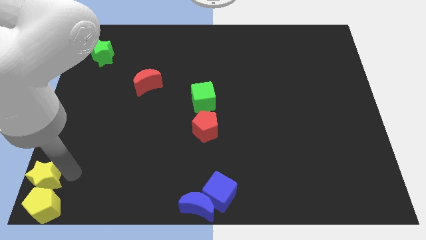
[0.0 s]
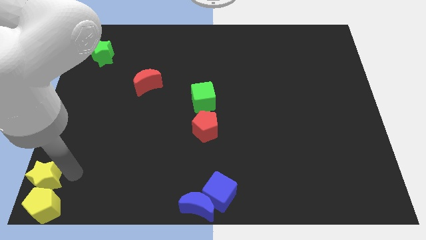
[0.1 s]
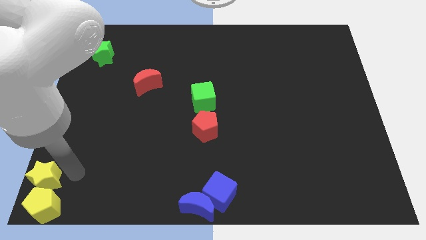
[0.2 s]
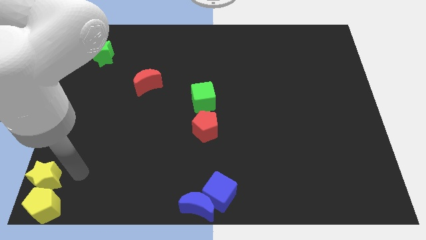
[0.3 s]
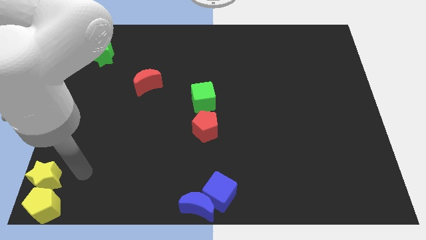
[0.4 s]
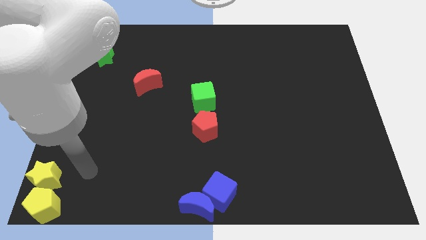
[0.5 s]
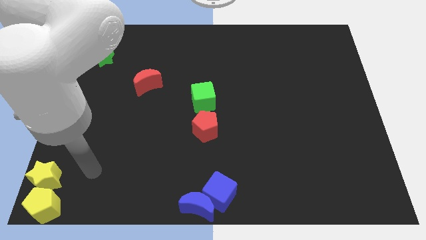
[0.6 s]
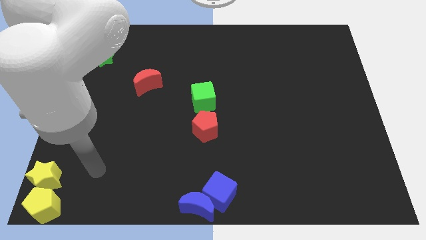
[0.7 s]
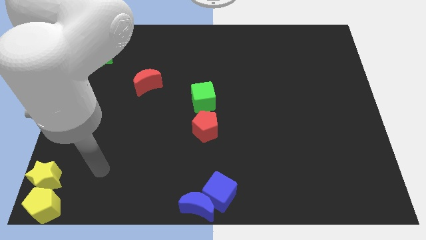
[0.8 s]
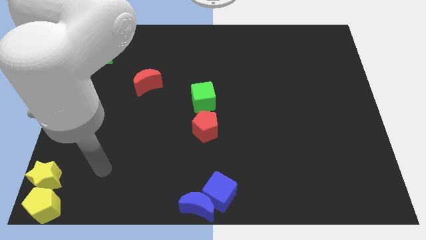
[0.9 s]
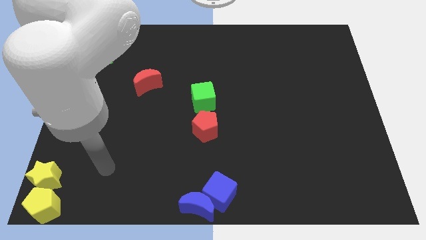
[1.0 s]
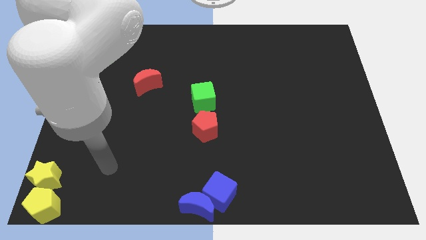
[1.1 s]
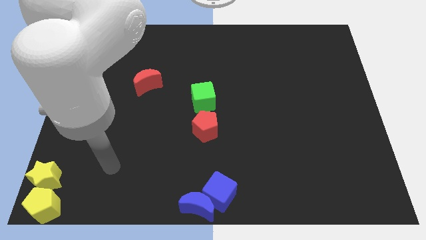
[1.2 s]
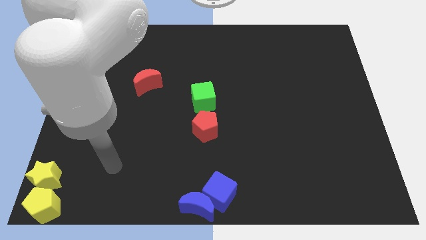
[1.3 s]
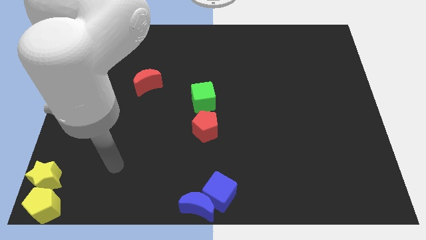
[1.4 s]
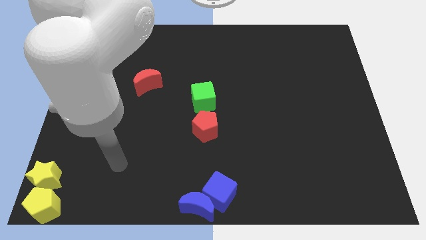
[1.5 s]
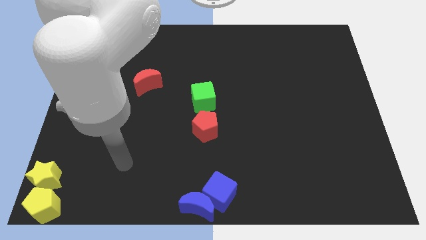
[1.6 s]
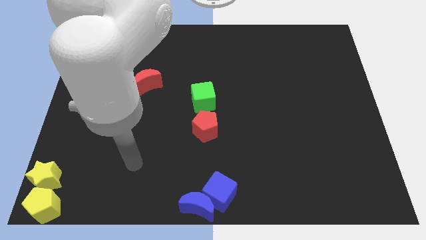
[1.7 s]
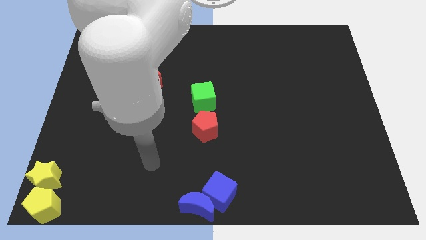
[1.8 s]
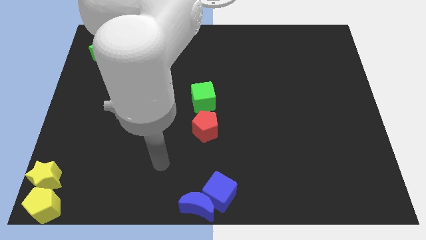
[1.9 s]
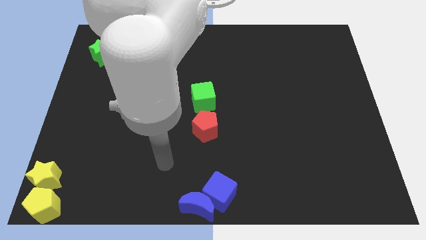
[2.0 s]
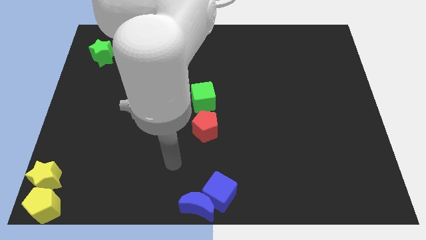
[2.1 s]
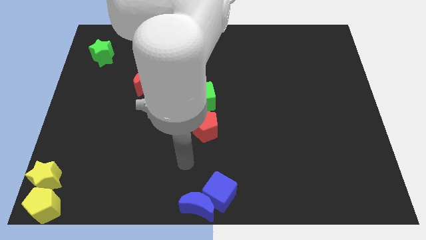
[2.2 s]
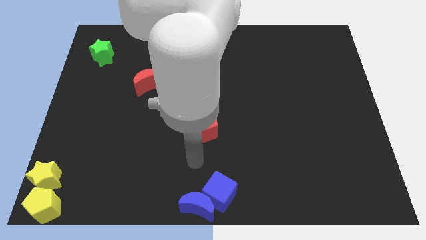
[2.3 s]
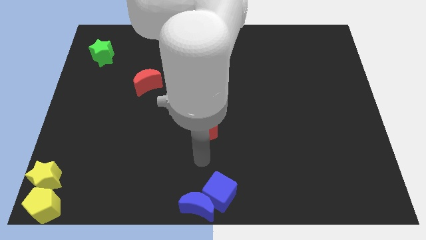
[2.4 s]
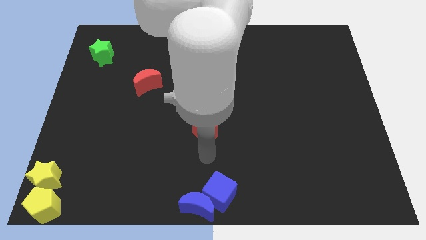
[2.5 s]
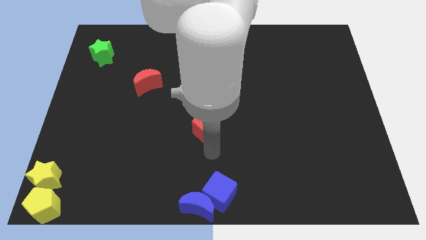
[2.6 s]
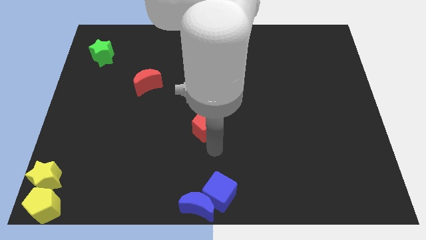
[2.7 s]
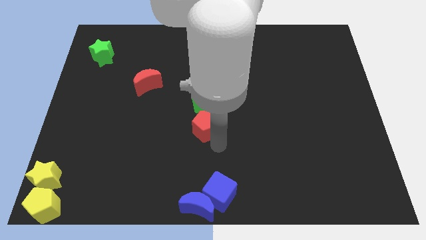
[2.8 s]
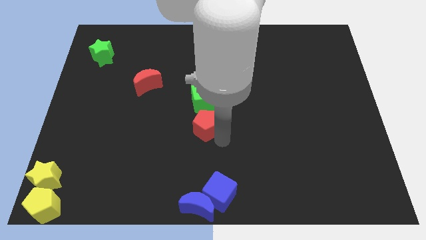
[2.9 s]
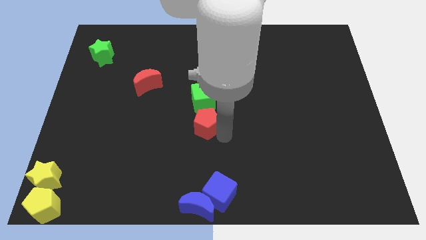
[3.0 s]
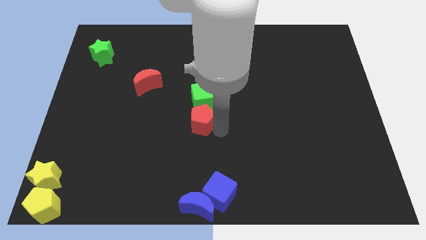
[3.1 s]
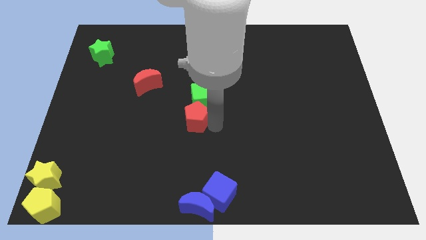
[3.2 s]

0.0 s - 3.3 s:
point your arm in between the red pentagon and blue cube

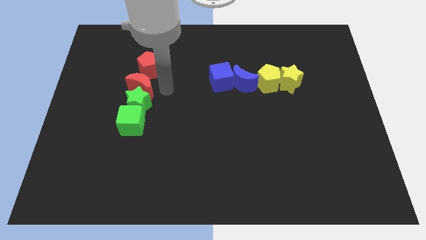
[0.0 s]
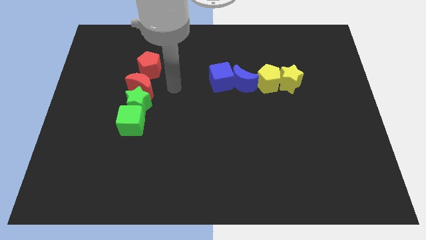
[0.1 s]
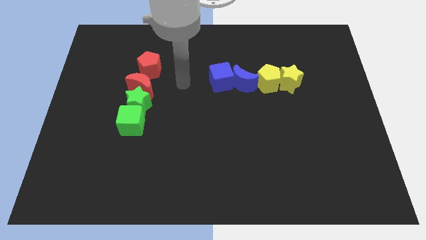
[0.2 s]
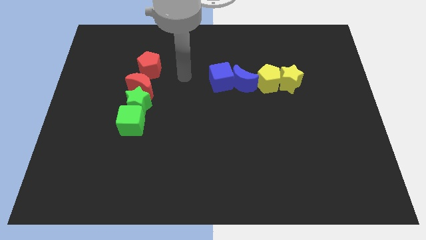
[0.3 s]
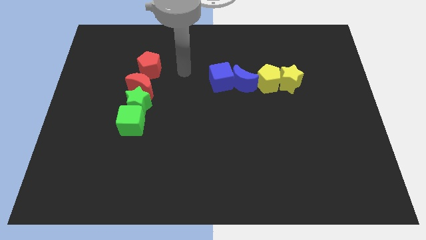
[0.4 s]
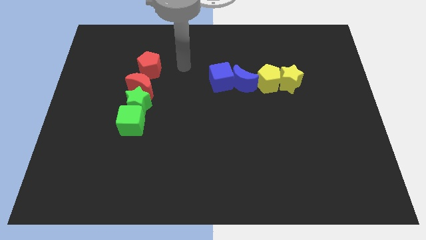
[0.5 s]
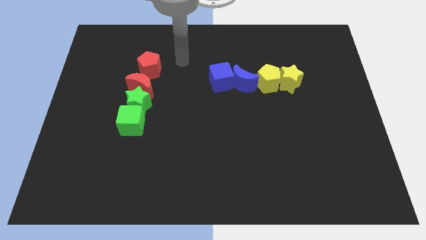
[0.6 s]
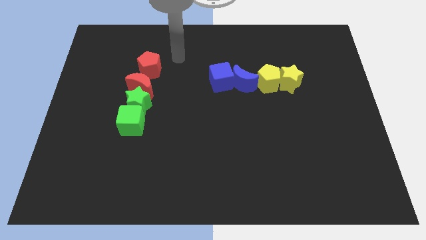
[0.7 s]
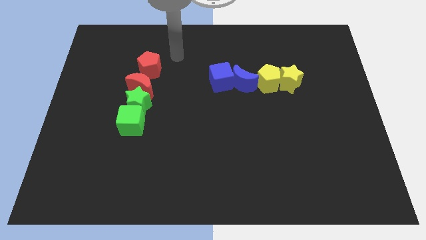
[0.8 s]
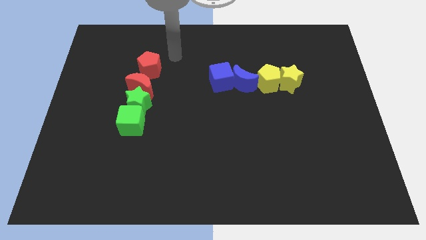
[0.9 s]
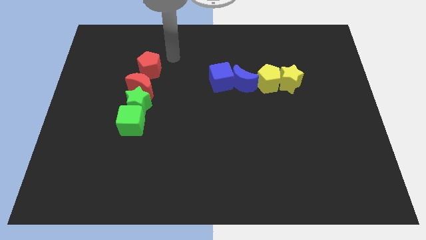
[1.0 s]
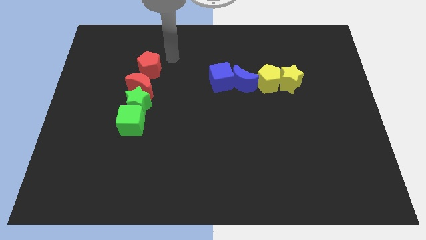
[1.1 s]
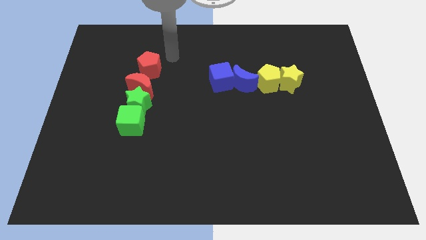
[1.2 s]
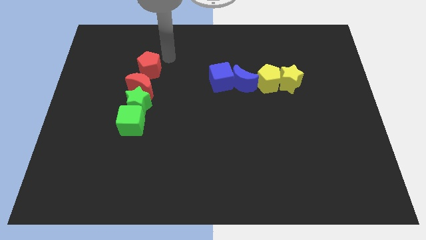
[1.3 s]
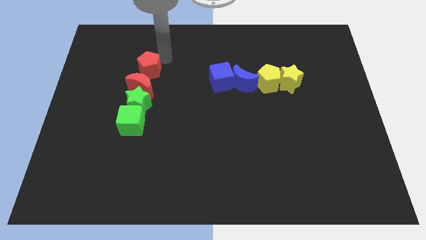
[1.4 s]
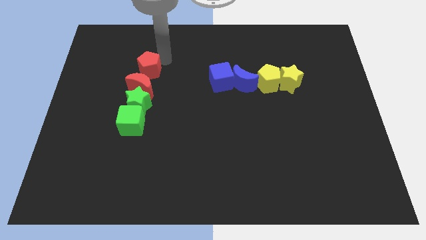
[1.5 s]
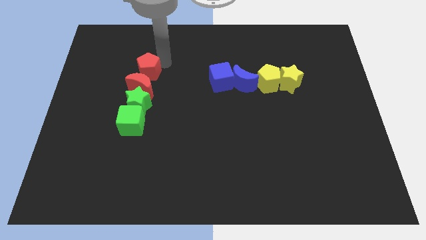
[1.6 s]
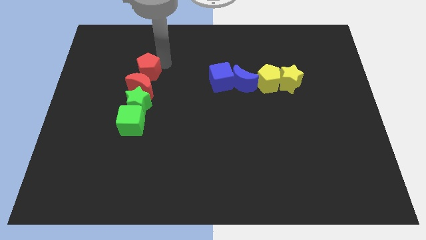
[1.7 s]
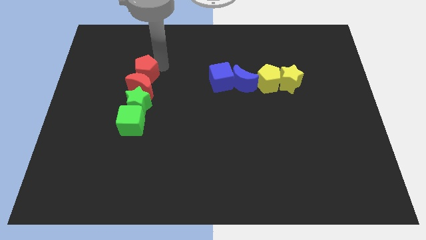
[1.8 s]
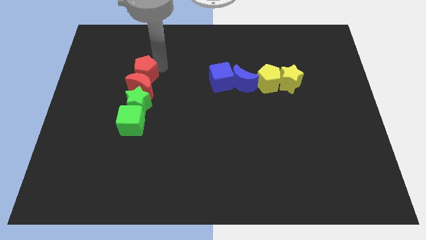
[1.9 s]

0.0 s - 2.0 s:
touch the red pentagon on its top

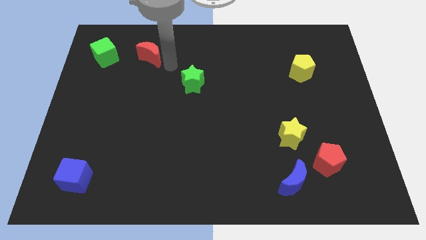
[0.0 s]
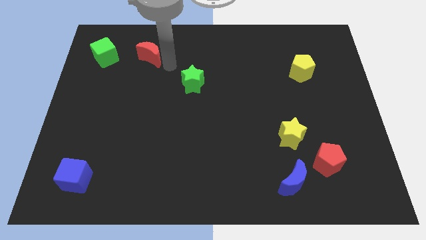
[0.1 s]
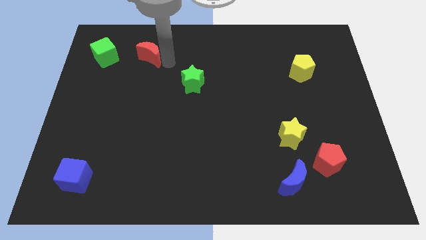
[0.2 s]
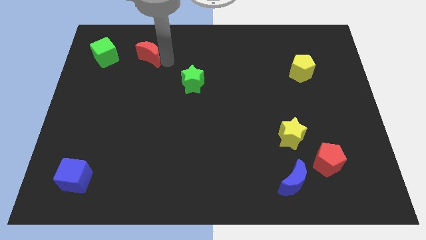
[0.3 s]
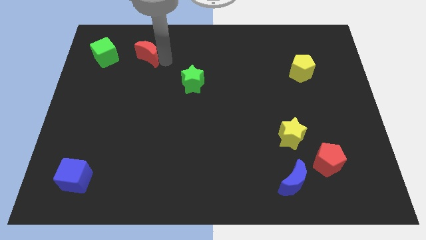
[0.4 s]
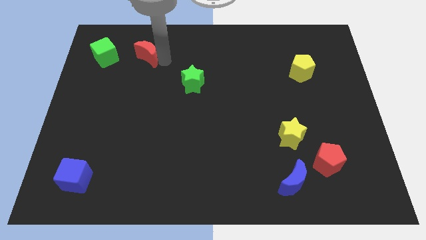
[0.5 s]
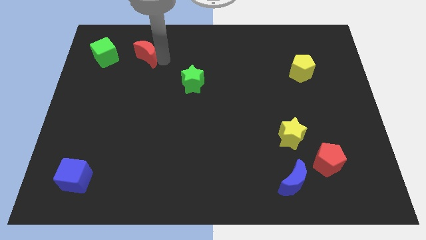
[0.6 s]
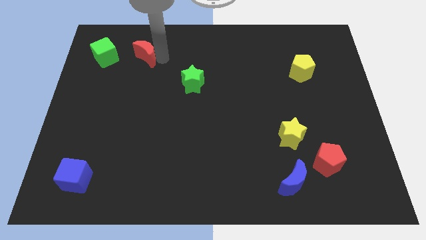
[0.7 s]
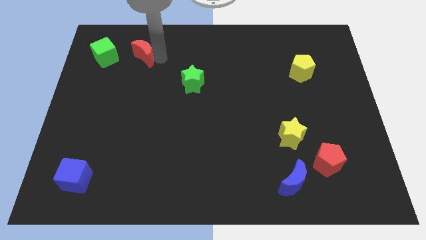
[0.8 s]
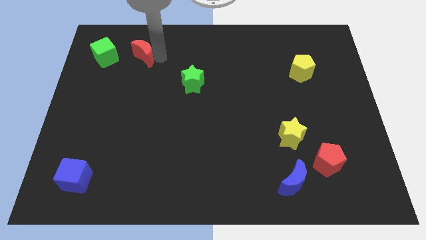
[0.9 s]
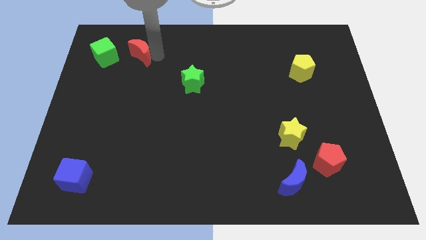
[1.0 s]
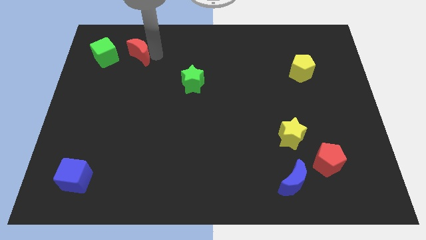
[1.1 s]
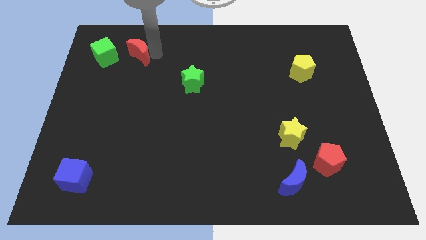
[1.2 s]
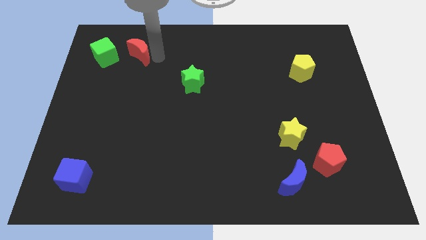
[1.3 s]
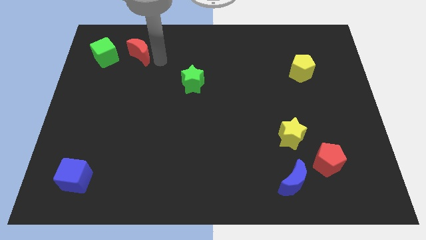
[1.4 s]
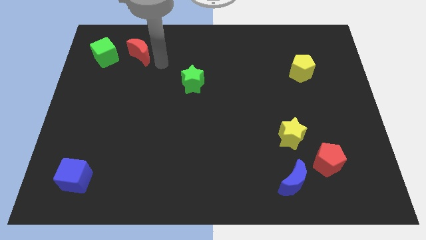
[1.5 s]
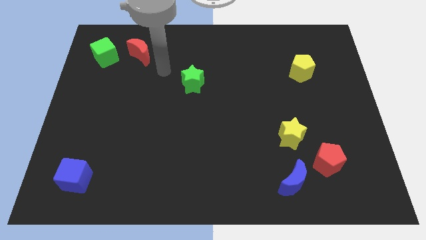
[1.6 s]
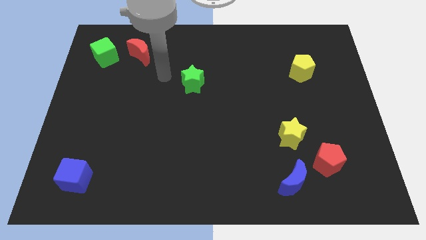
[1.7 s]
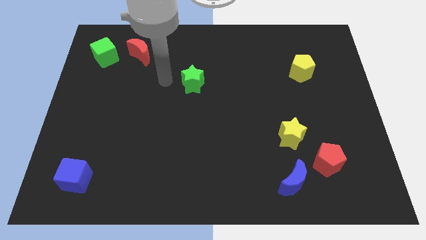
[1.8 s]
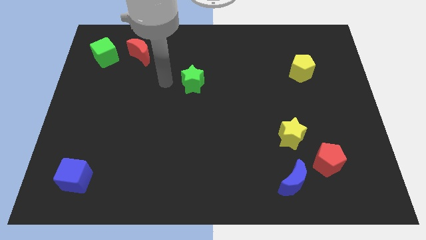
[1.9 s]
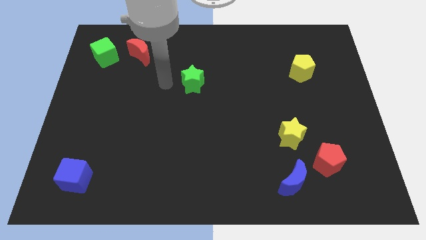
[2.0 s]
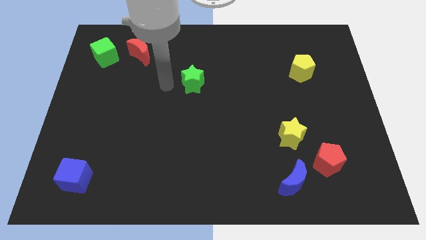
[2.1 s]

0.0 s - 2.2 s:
move the red moon close to the green cube
